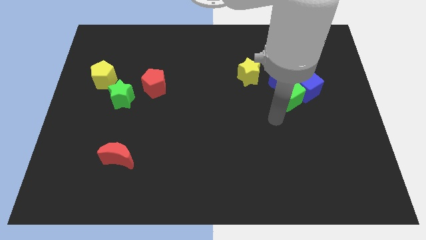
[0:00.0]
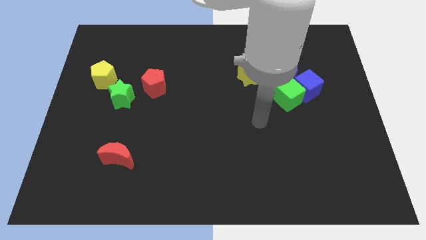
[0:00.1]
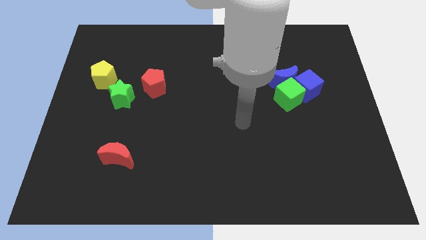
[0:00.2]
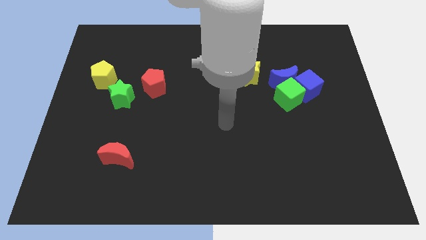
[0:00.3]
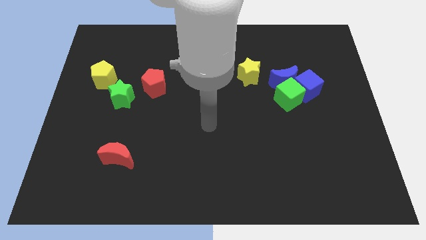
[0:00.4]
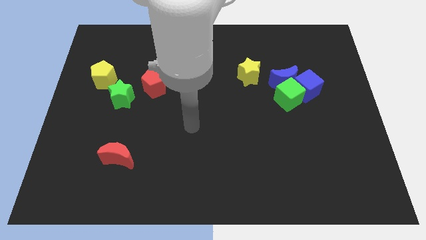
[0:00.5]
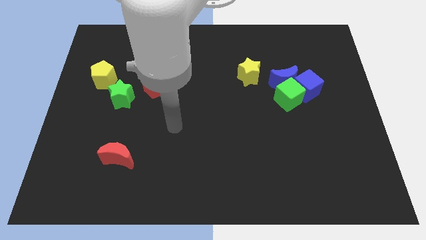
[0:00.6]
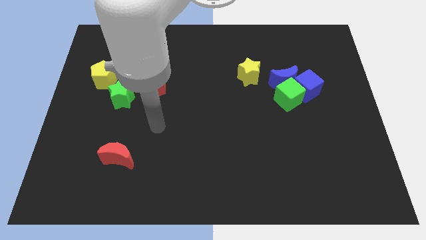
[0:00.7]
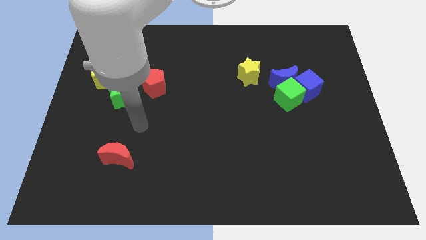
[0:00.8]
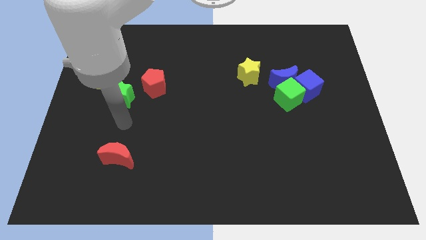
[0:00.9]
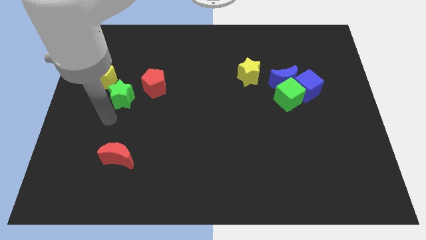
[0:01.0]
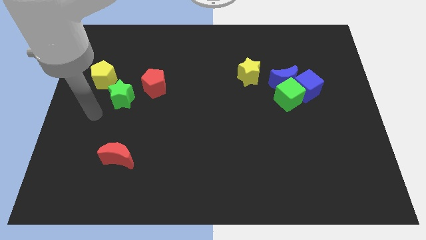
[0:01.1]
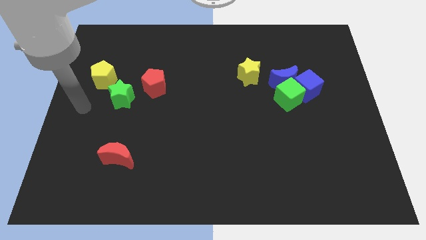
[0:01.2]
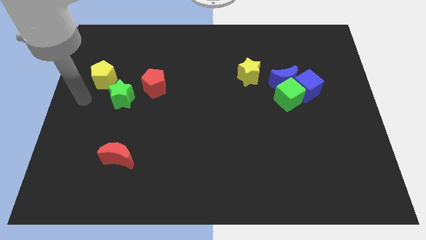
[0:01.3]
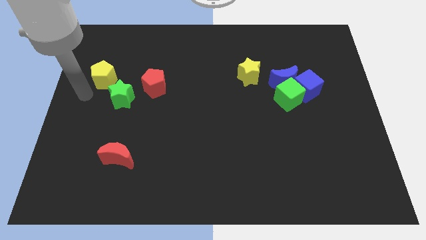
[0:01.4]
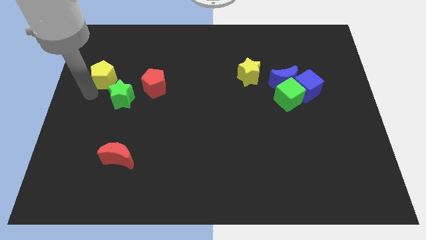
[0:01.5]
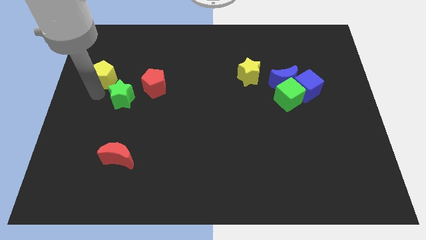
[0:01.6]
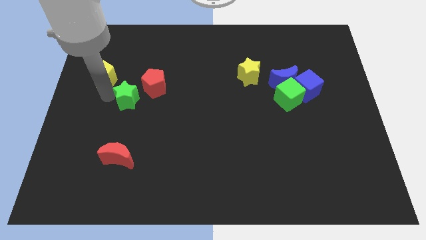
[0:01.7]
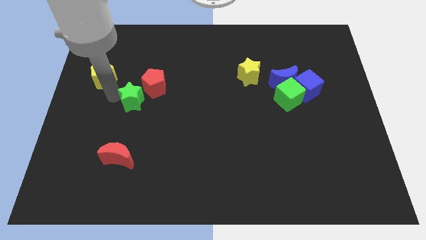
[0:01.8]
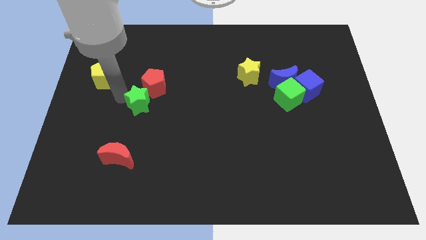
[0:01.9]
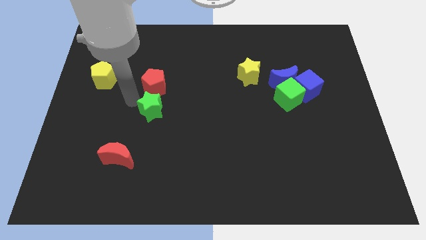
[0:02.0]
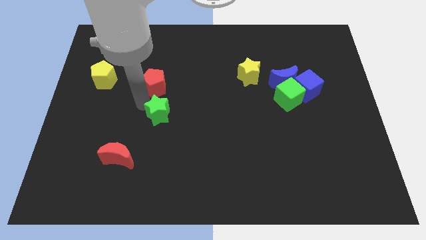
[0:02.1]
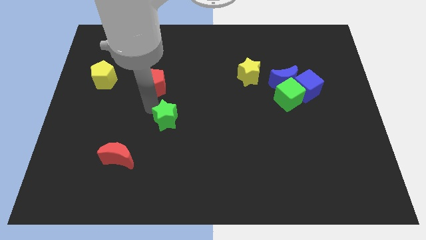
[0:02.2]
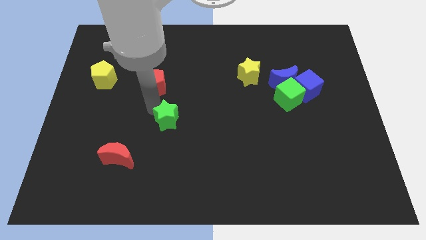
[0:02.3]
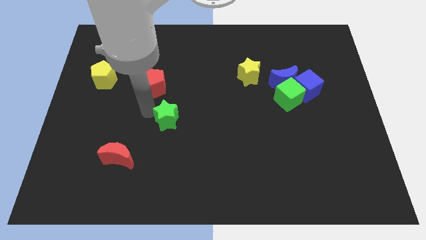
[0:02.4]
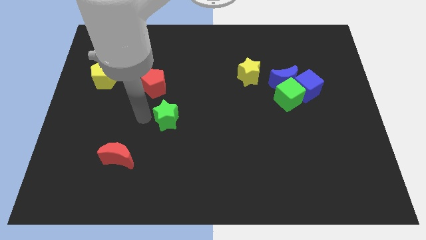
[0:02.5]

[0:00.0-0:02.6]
separate green star from red pentagon

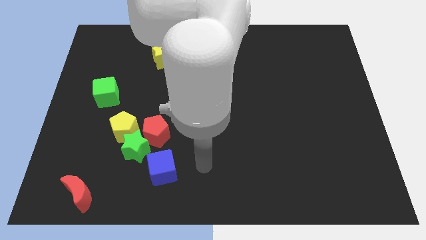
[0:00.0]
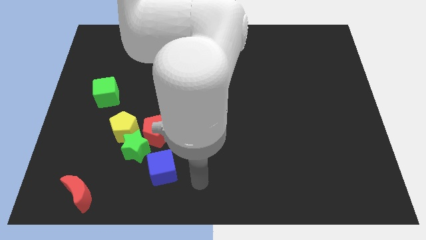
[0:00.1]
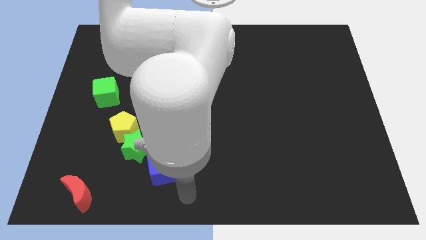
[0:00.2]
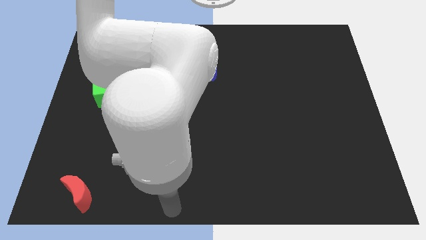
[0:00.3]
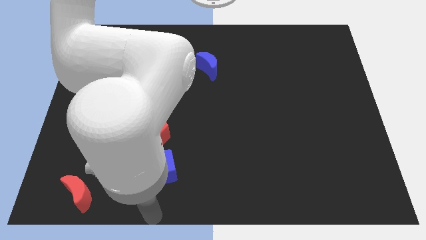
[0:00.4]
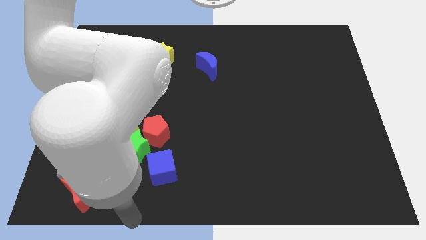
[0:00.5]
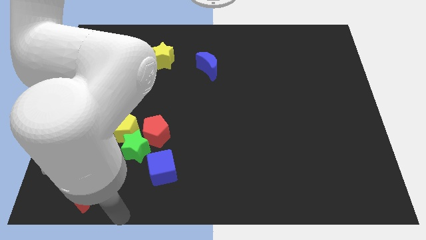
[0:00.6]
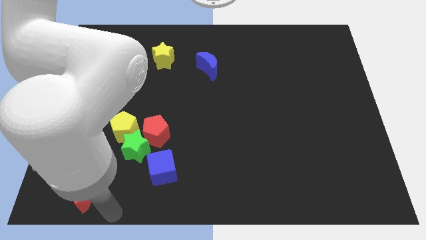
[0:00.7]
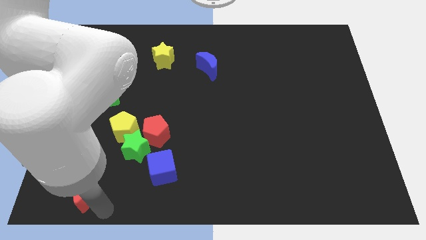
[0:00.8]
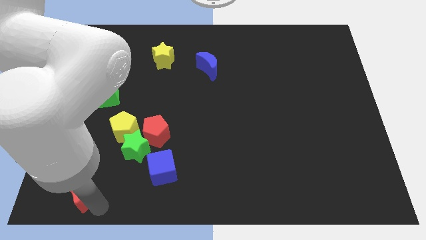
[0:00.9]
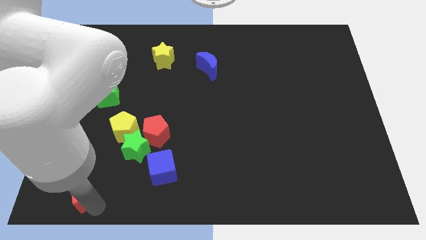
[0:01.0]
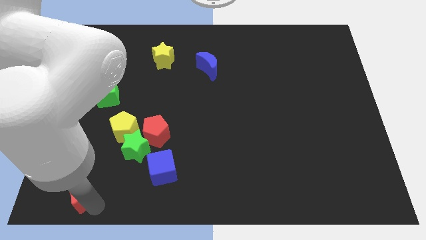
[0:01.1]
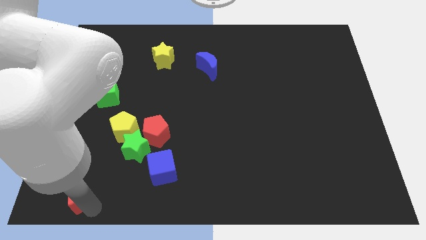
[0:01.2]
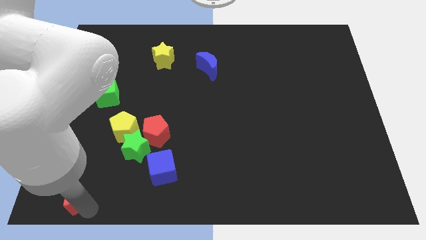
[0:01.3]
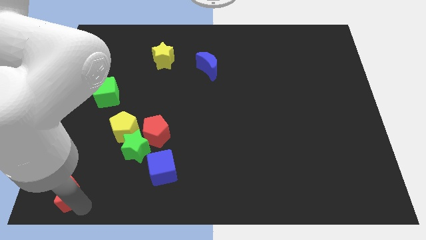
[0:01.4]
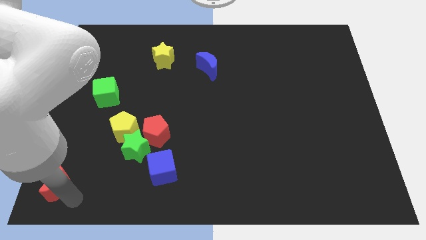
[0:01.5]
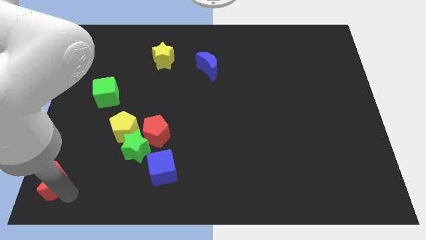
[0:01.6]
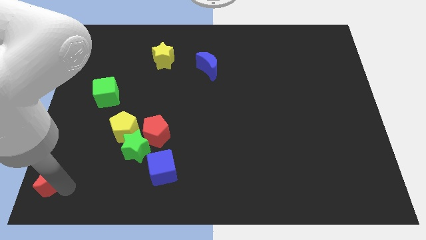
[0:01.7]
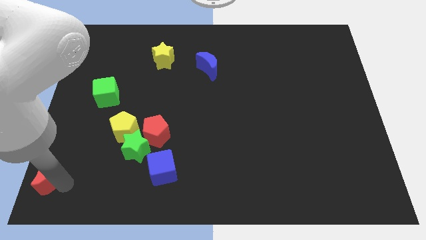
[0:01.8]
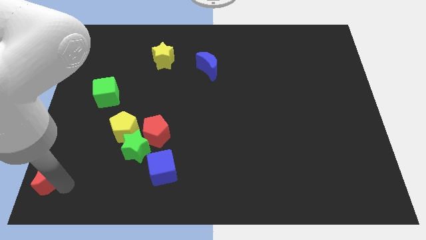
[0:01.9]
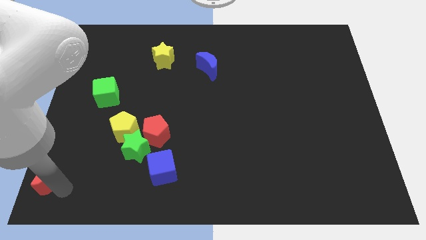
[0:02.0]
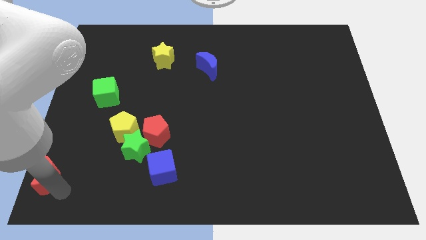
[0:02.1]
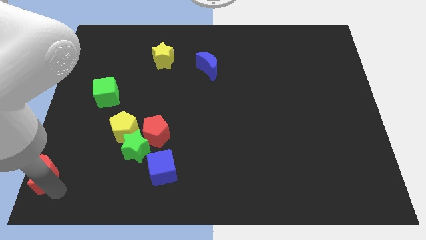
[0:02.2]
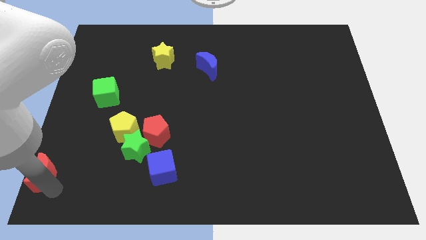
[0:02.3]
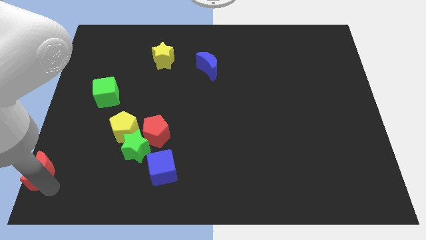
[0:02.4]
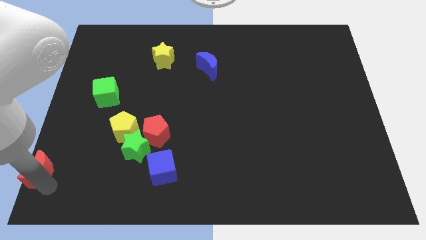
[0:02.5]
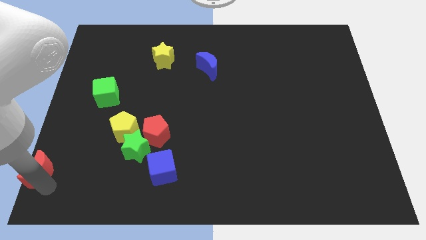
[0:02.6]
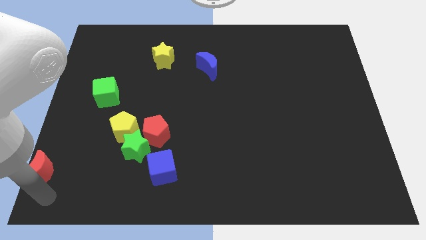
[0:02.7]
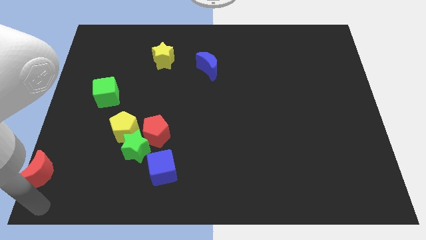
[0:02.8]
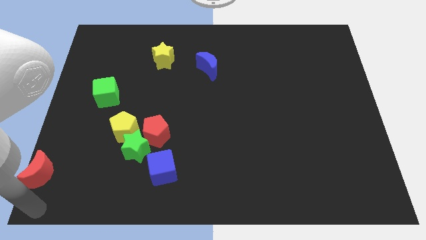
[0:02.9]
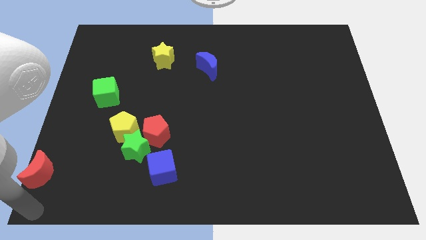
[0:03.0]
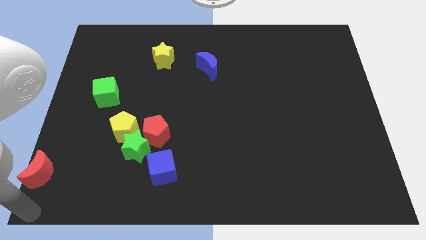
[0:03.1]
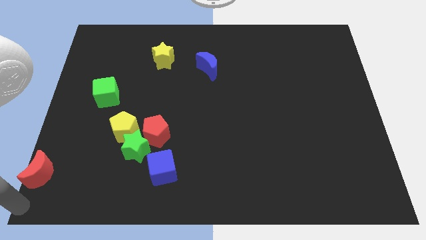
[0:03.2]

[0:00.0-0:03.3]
move the red moon at the bottom left side of the table

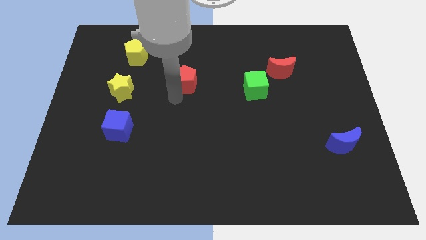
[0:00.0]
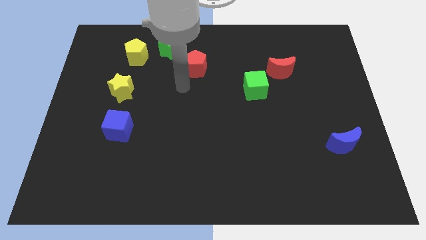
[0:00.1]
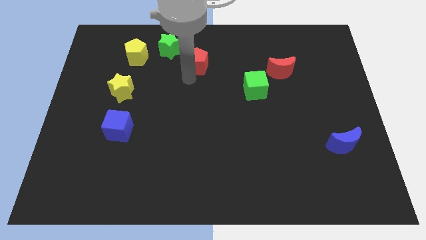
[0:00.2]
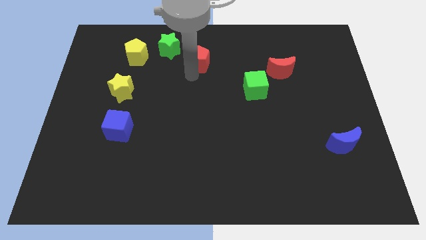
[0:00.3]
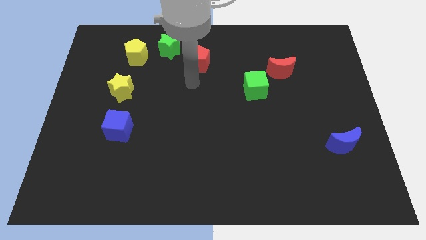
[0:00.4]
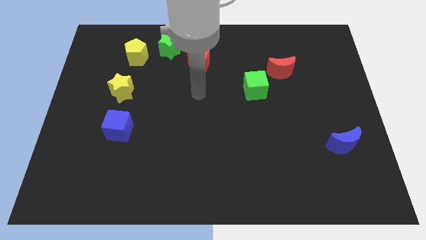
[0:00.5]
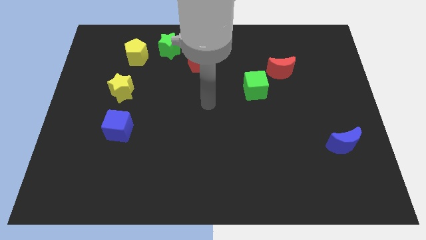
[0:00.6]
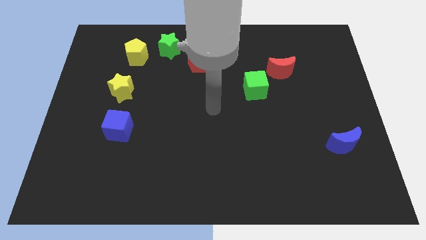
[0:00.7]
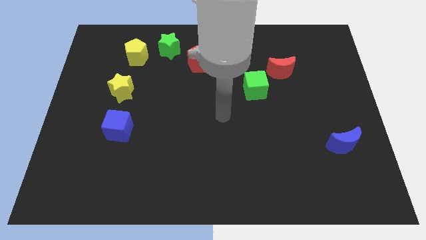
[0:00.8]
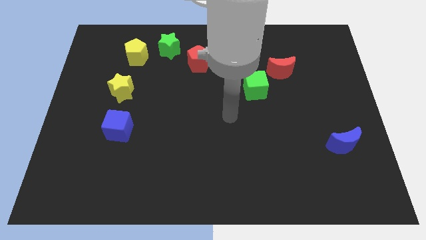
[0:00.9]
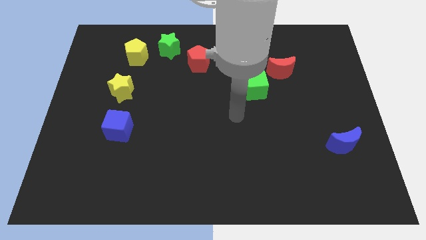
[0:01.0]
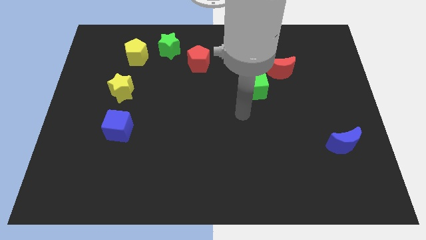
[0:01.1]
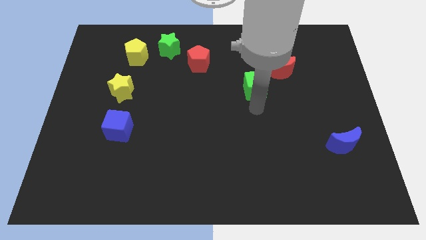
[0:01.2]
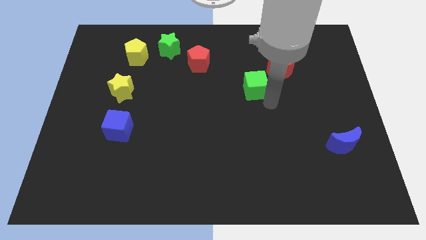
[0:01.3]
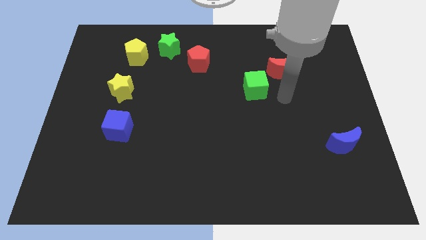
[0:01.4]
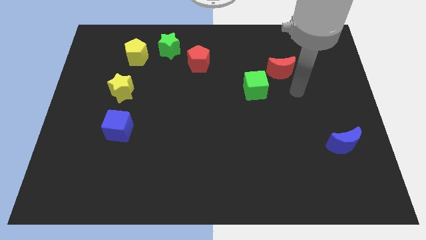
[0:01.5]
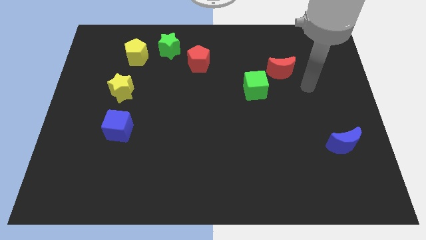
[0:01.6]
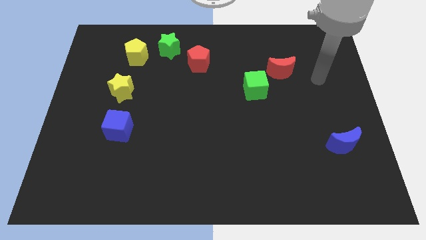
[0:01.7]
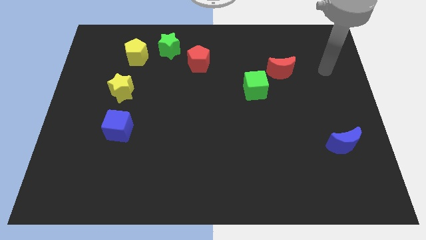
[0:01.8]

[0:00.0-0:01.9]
slightly push the red pentagon towards the green star

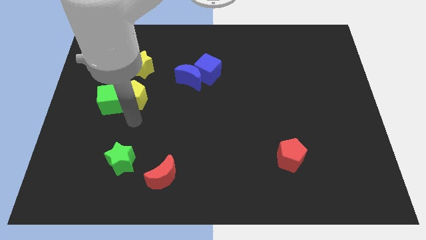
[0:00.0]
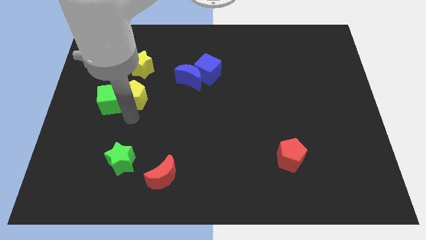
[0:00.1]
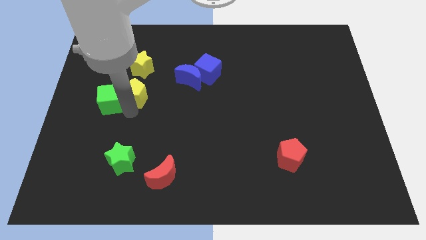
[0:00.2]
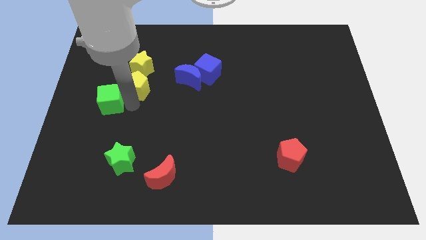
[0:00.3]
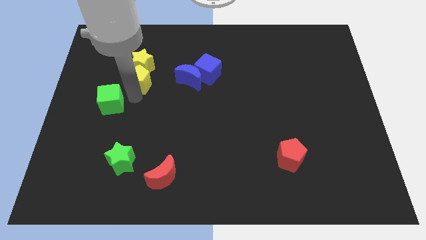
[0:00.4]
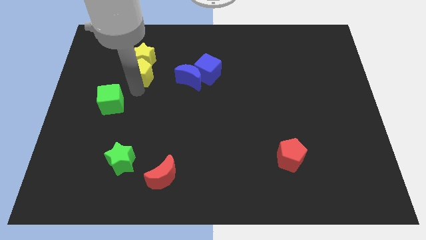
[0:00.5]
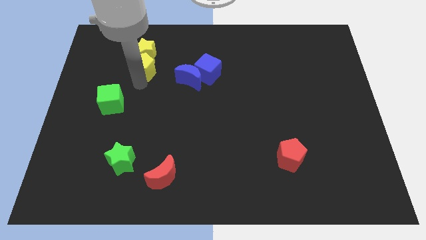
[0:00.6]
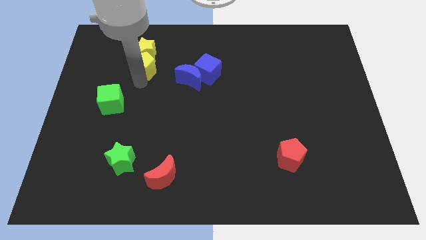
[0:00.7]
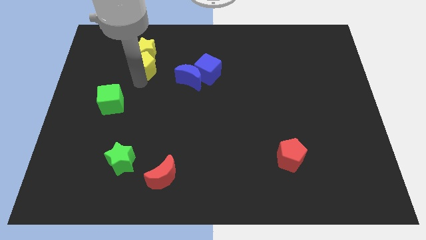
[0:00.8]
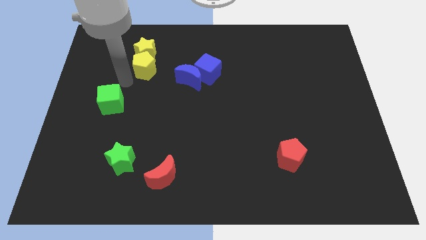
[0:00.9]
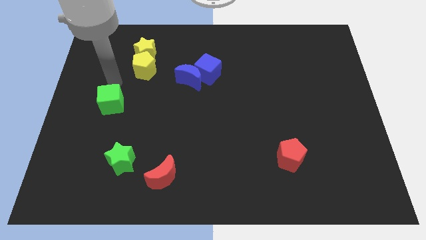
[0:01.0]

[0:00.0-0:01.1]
push the yellow pentagon into the yellow star

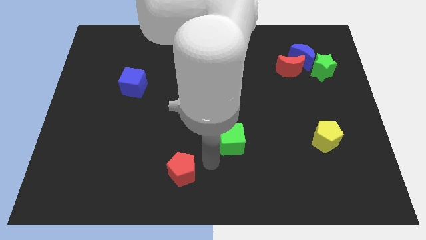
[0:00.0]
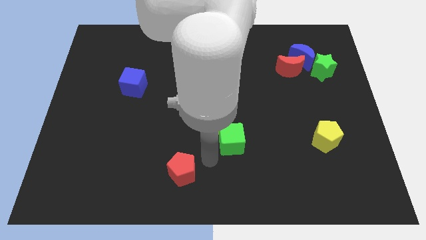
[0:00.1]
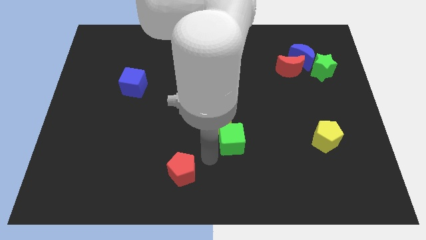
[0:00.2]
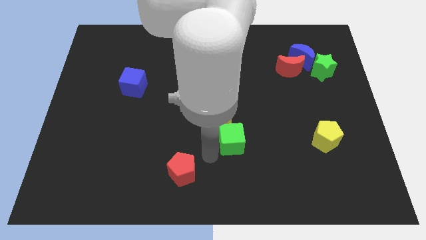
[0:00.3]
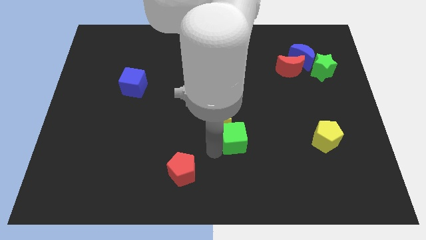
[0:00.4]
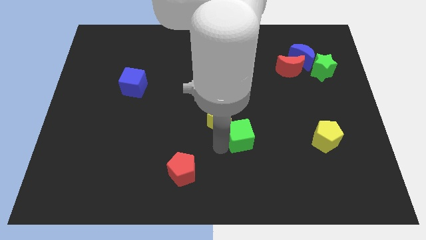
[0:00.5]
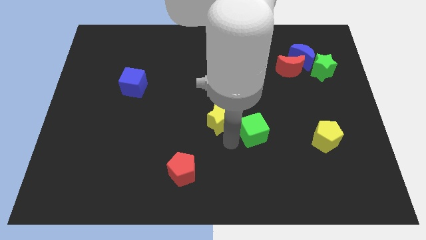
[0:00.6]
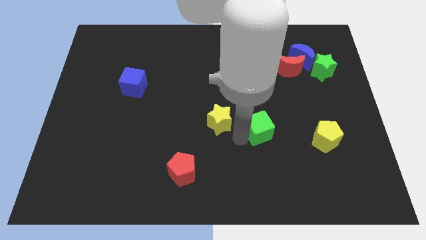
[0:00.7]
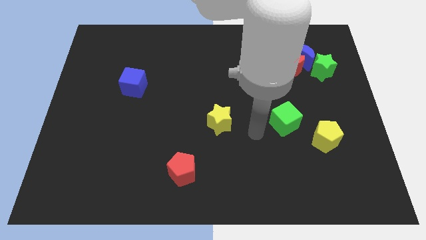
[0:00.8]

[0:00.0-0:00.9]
separate green cube from the yellow star
